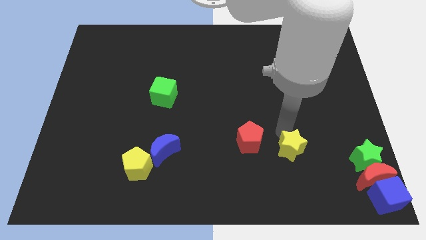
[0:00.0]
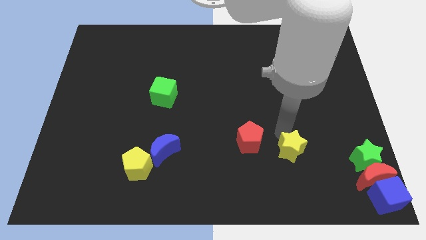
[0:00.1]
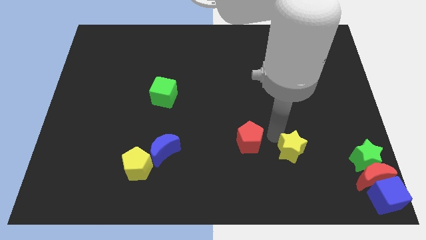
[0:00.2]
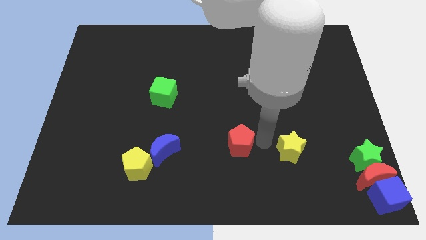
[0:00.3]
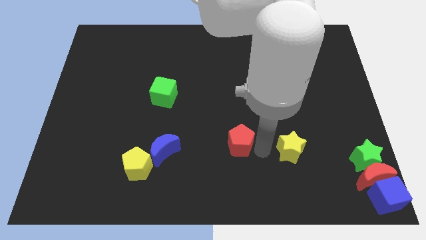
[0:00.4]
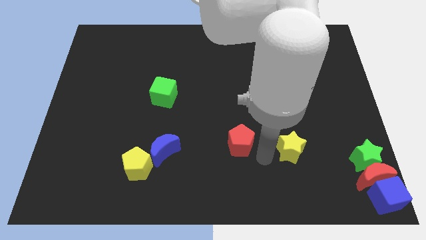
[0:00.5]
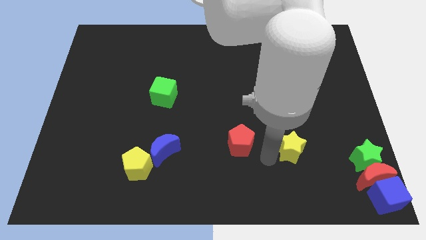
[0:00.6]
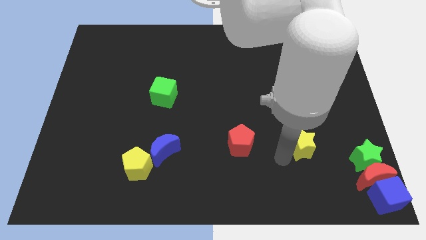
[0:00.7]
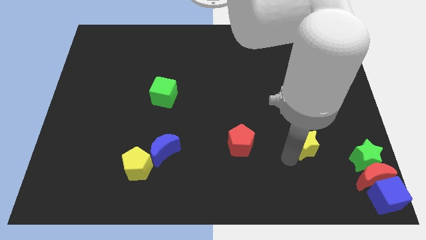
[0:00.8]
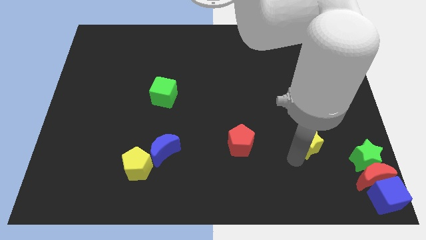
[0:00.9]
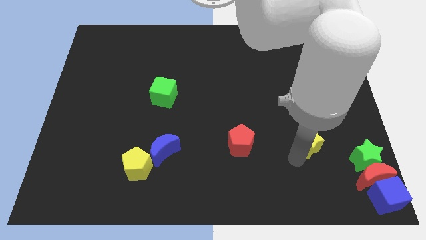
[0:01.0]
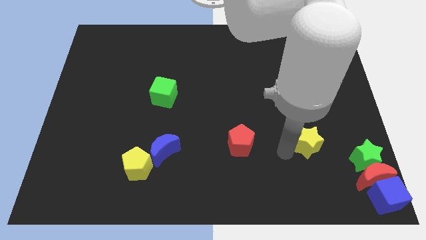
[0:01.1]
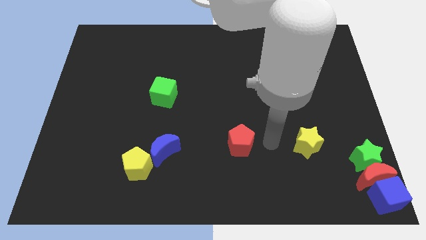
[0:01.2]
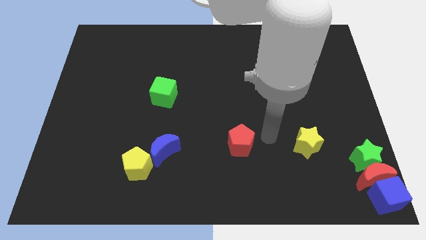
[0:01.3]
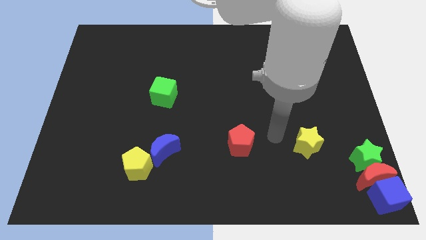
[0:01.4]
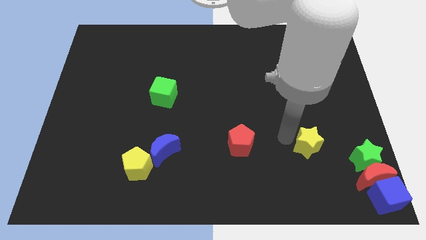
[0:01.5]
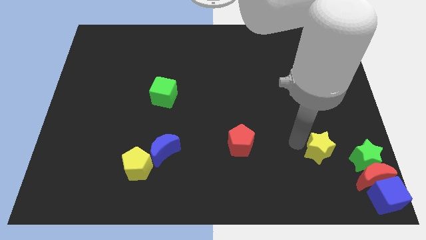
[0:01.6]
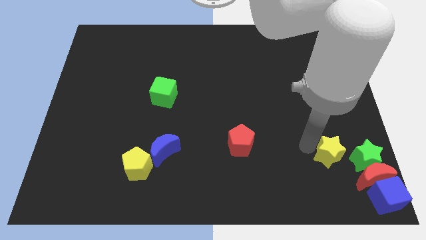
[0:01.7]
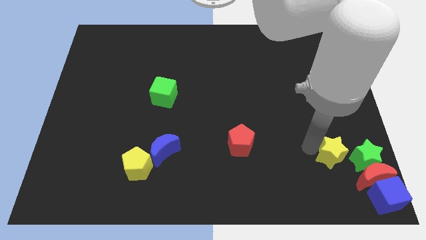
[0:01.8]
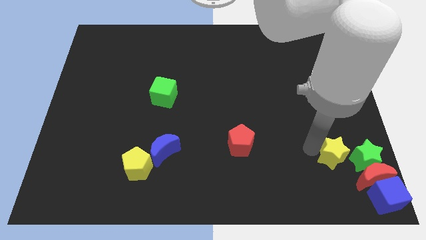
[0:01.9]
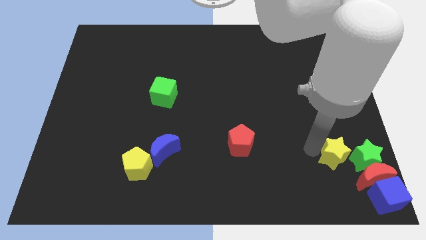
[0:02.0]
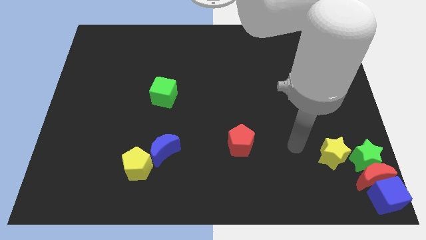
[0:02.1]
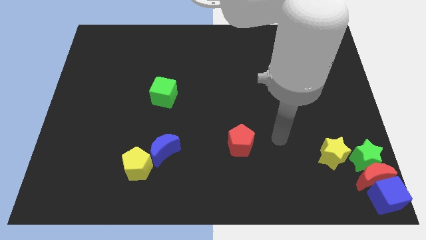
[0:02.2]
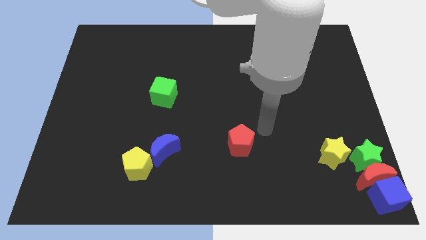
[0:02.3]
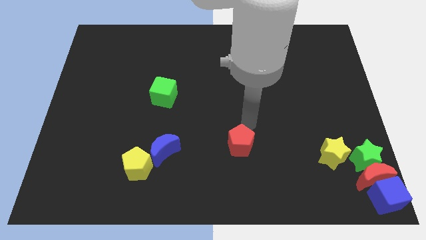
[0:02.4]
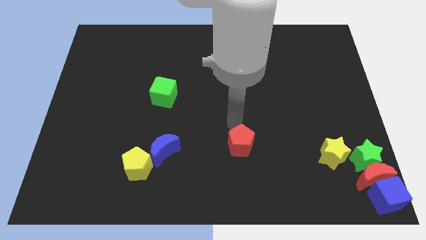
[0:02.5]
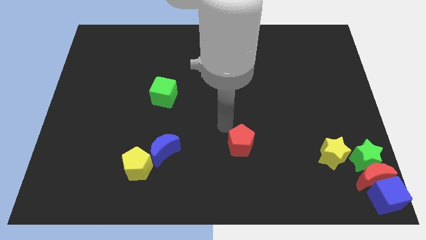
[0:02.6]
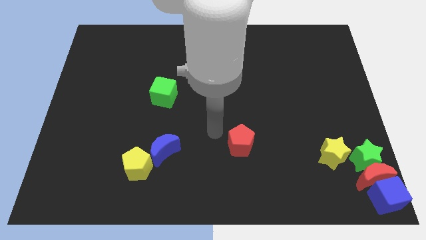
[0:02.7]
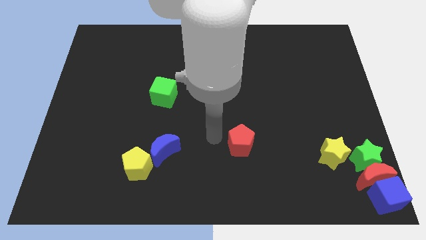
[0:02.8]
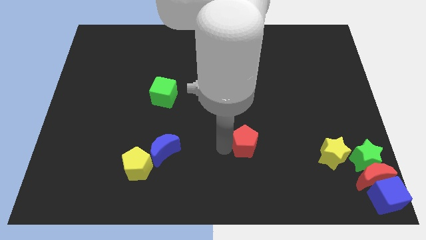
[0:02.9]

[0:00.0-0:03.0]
move the yellow star left side of the green star

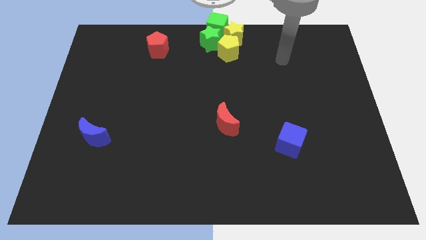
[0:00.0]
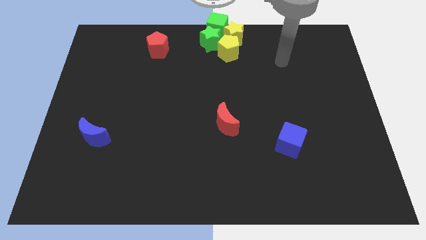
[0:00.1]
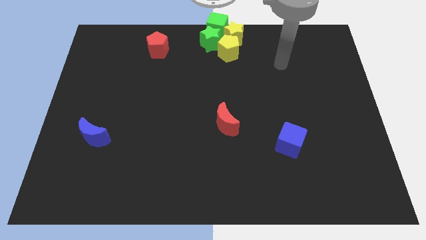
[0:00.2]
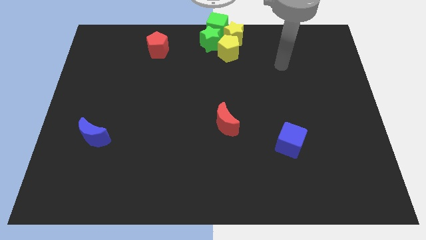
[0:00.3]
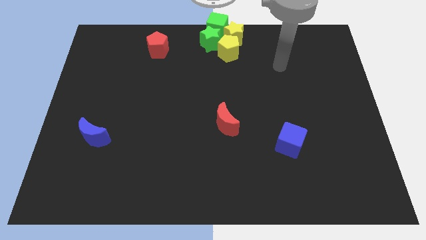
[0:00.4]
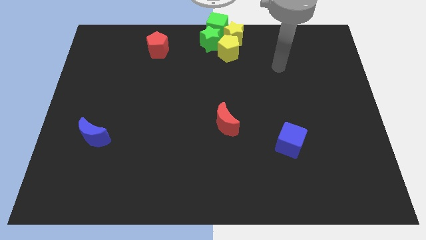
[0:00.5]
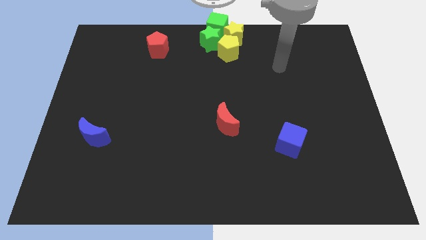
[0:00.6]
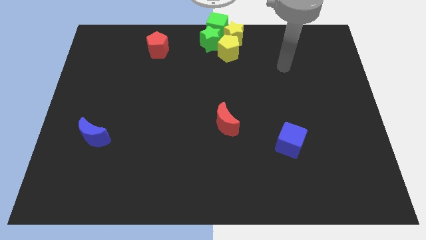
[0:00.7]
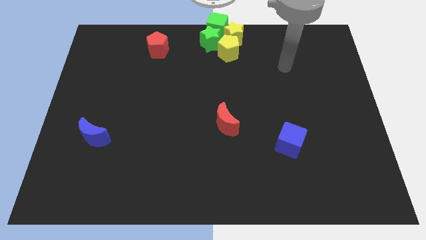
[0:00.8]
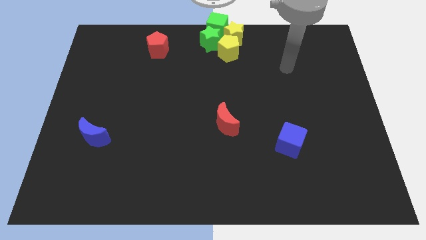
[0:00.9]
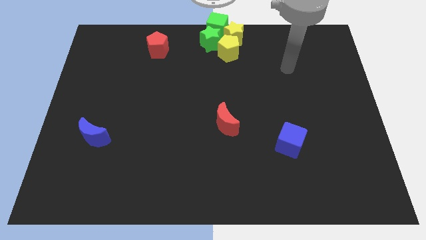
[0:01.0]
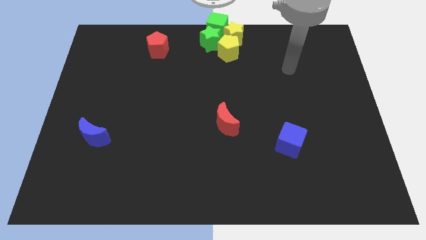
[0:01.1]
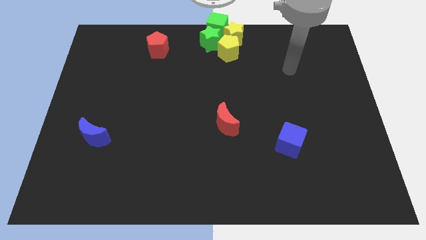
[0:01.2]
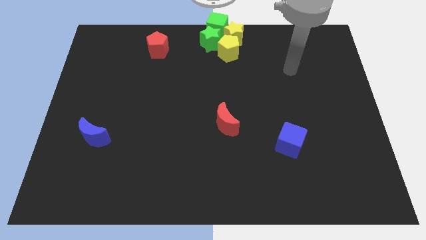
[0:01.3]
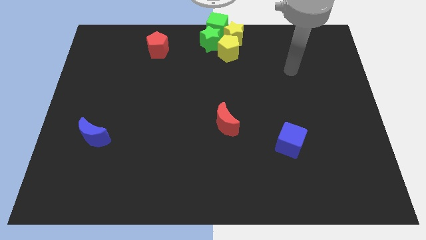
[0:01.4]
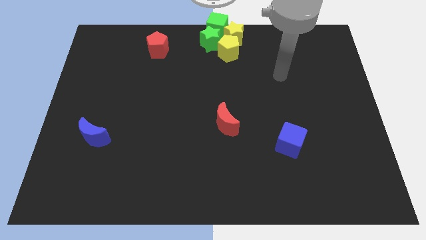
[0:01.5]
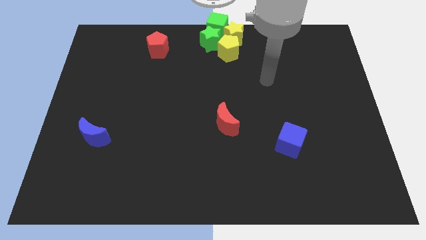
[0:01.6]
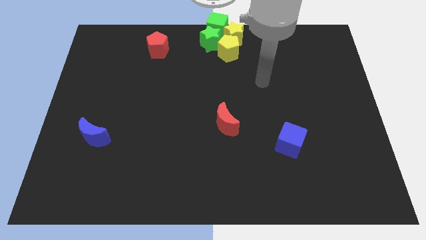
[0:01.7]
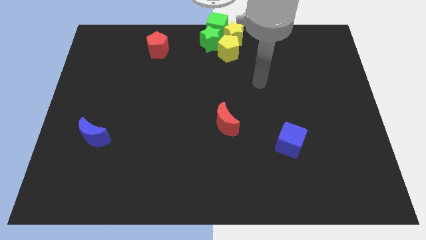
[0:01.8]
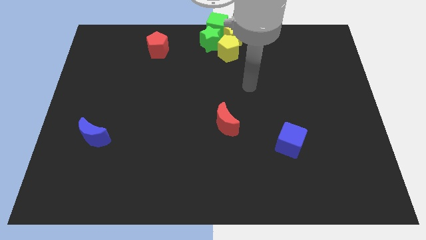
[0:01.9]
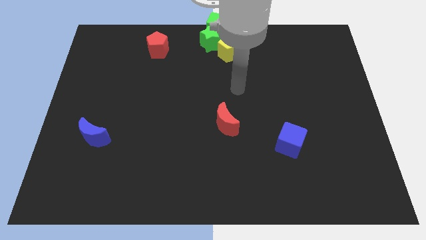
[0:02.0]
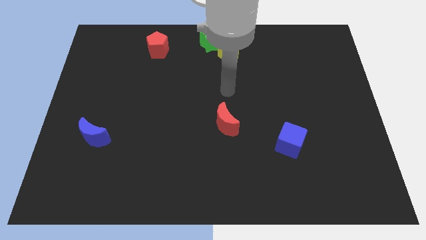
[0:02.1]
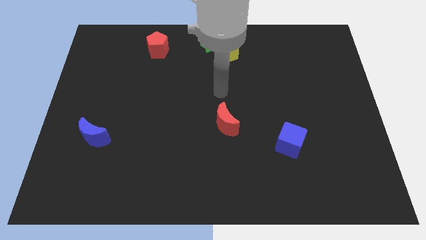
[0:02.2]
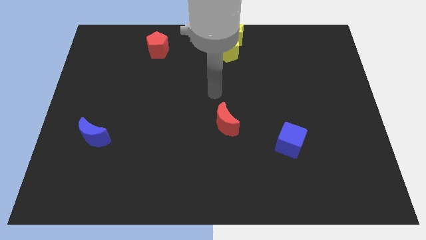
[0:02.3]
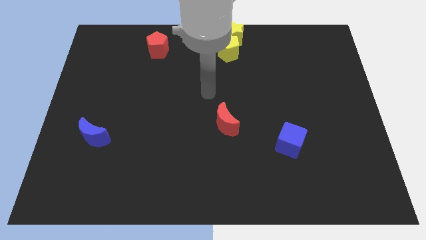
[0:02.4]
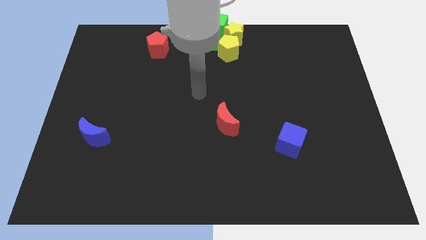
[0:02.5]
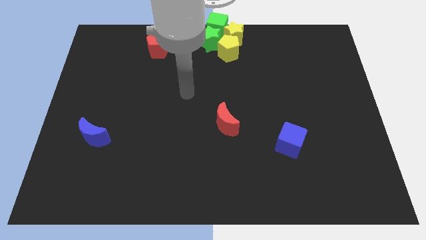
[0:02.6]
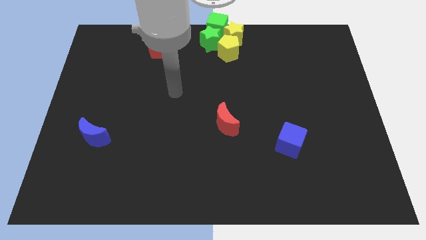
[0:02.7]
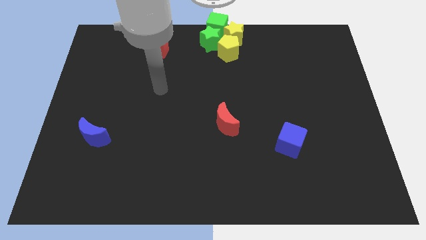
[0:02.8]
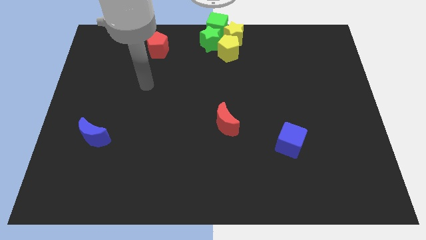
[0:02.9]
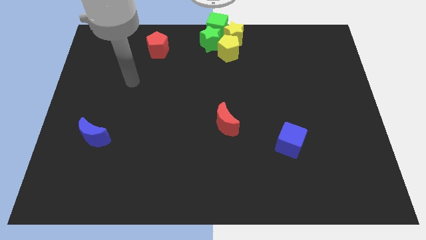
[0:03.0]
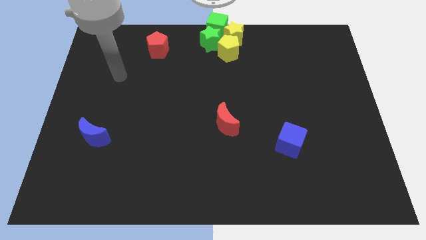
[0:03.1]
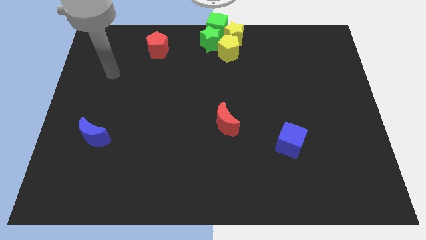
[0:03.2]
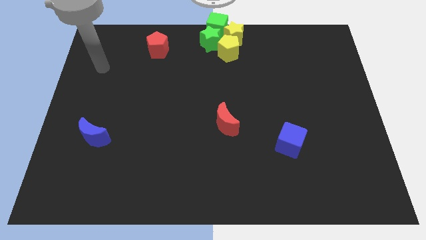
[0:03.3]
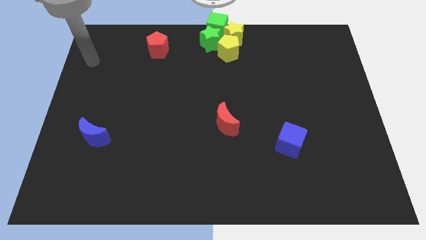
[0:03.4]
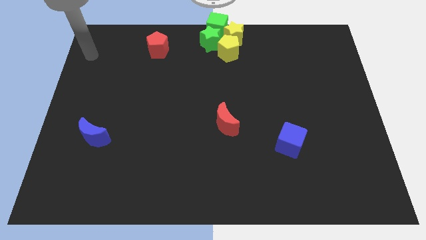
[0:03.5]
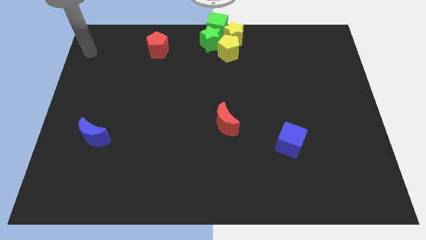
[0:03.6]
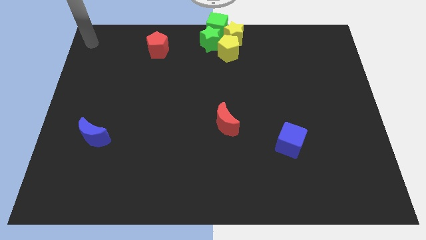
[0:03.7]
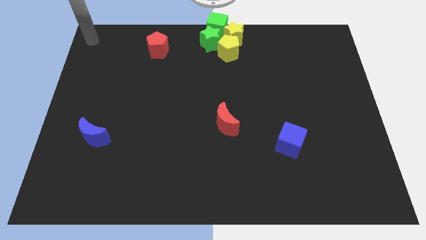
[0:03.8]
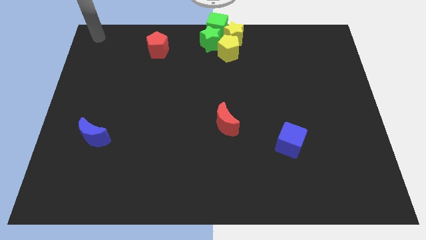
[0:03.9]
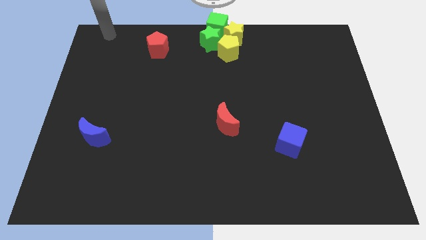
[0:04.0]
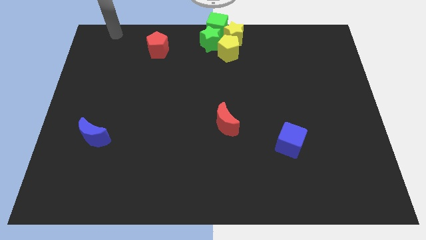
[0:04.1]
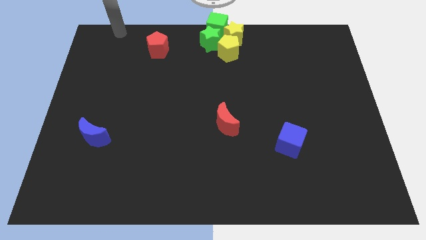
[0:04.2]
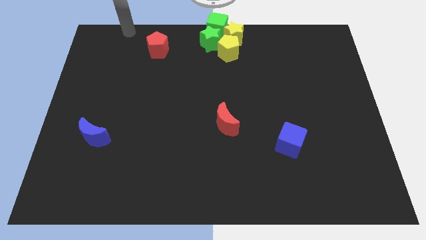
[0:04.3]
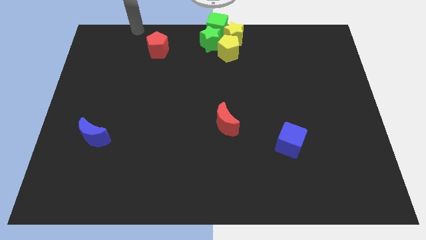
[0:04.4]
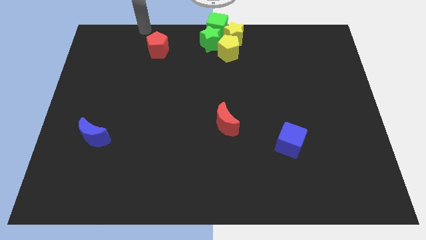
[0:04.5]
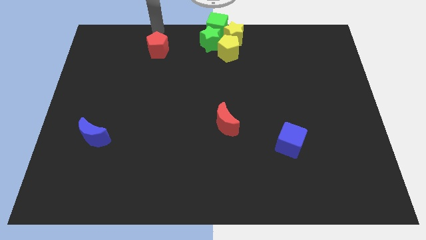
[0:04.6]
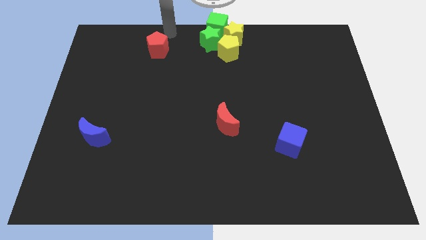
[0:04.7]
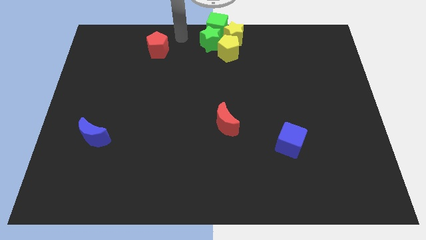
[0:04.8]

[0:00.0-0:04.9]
move the arm around the red pentagon in circular

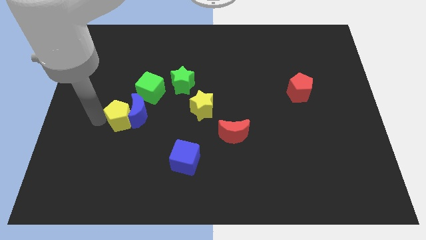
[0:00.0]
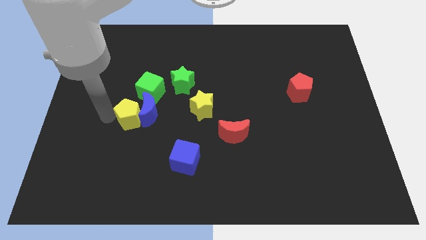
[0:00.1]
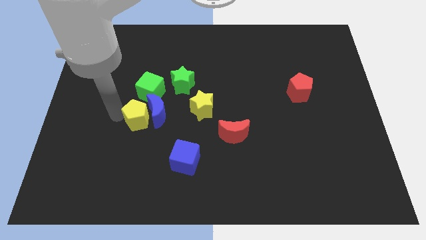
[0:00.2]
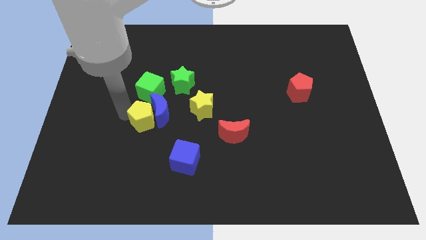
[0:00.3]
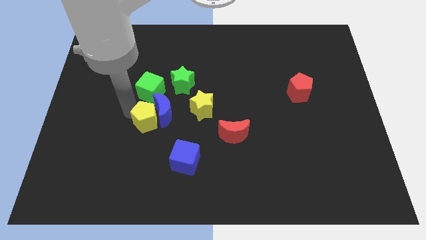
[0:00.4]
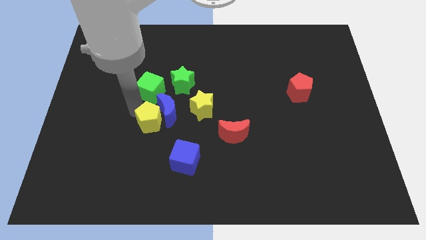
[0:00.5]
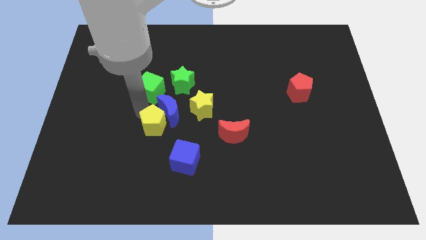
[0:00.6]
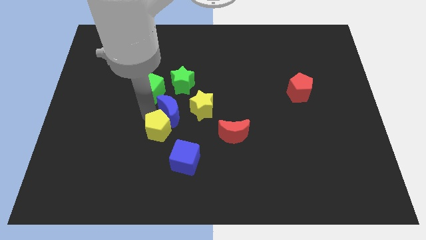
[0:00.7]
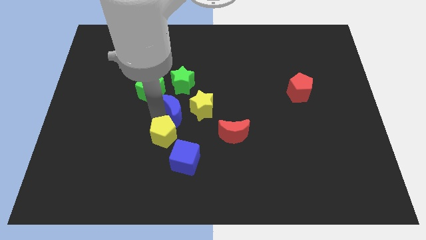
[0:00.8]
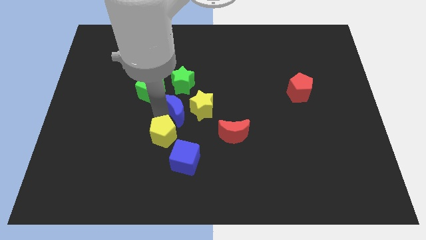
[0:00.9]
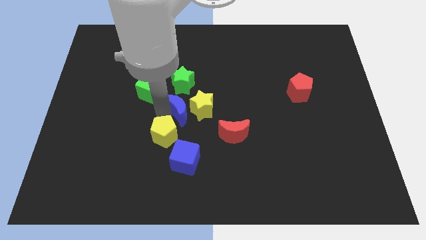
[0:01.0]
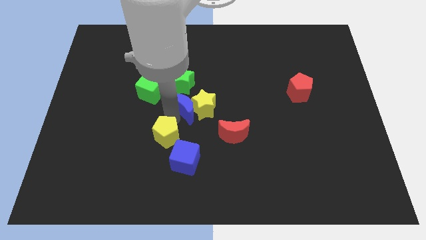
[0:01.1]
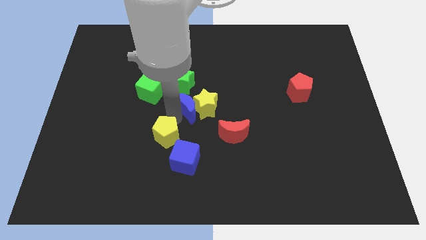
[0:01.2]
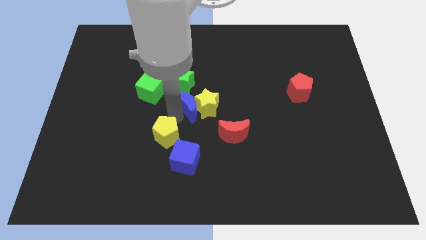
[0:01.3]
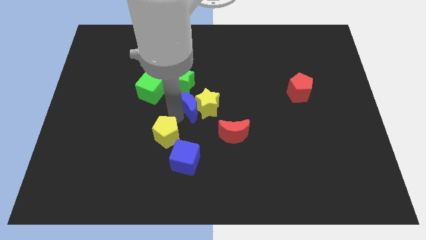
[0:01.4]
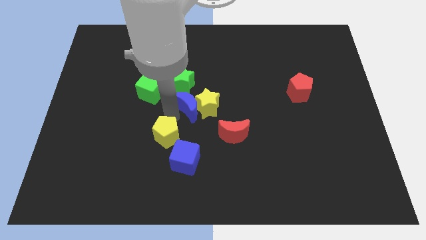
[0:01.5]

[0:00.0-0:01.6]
separate the yellow pentagon and blue crescent
